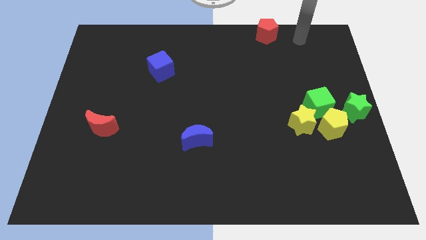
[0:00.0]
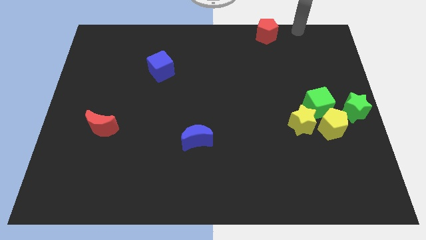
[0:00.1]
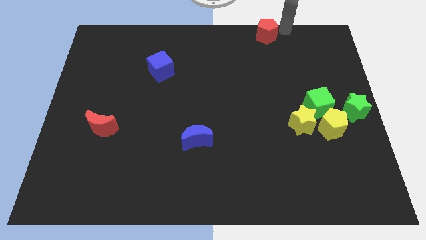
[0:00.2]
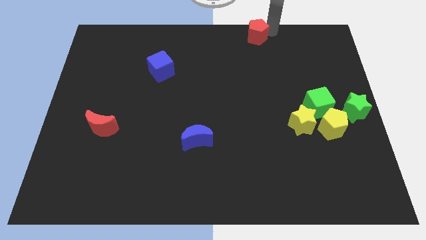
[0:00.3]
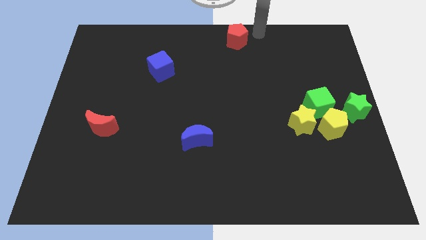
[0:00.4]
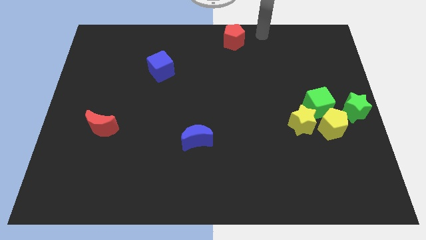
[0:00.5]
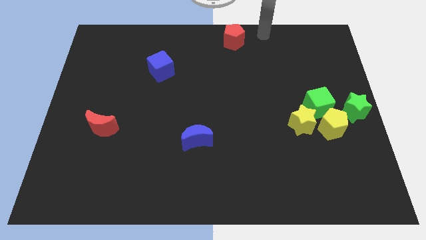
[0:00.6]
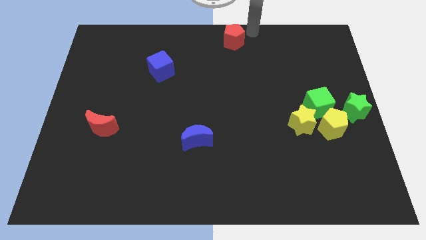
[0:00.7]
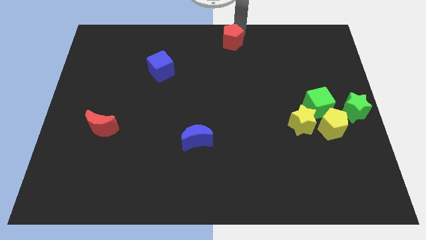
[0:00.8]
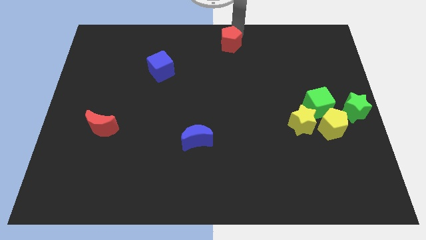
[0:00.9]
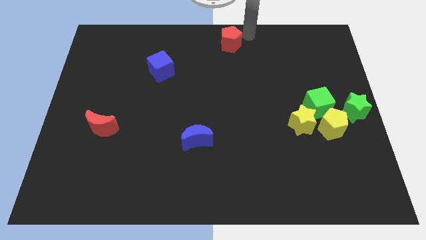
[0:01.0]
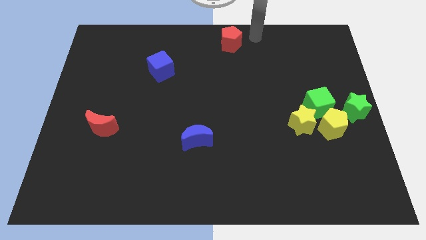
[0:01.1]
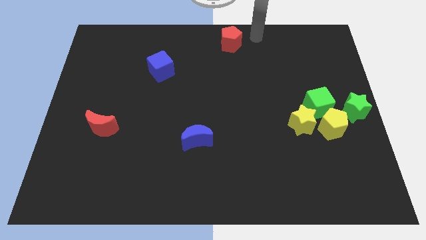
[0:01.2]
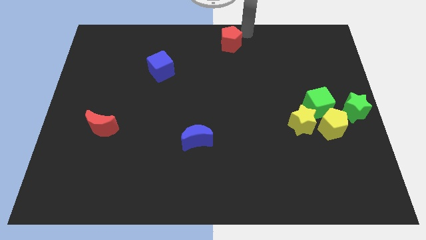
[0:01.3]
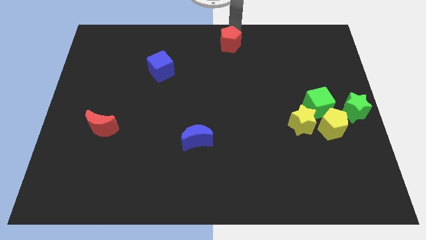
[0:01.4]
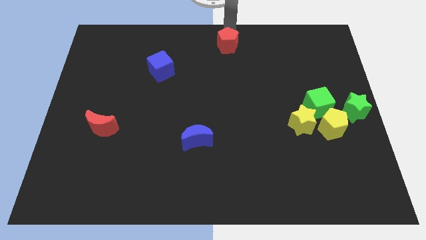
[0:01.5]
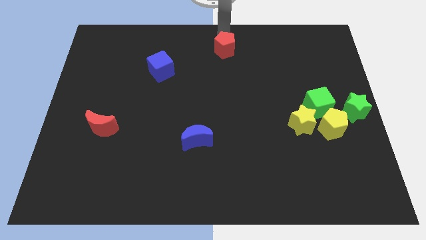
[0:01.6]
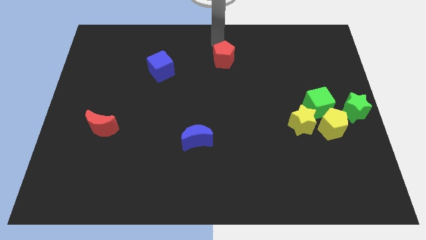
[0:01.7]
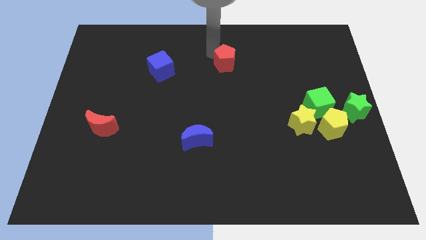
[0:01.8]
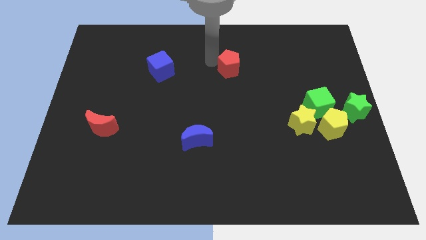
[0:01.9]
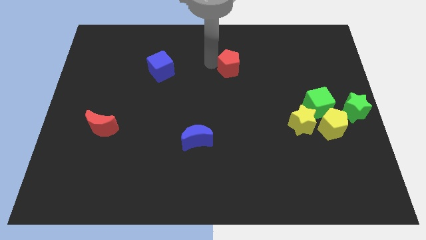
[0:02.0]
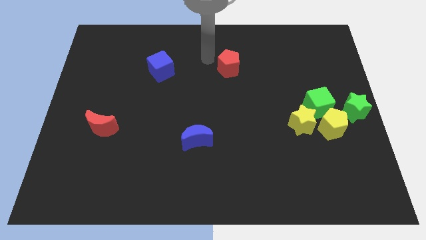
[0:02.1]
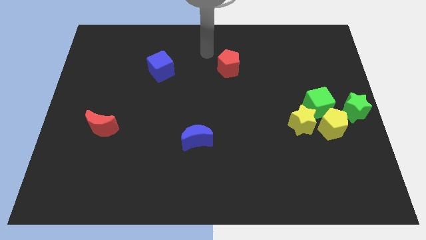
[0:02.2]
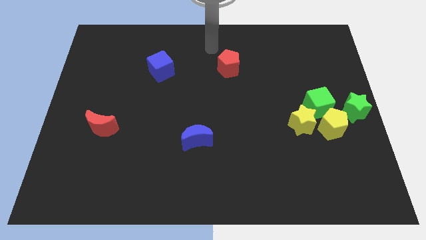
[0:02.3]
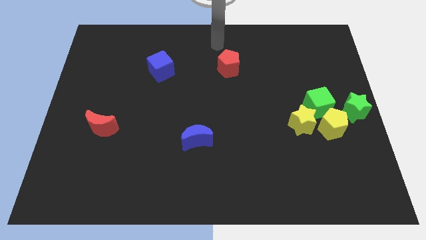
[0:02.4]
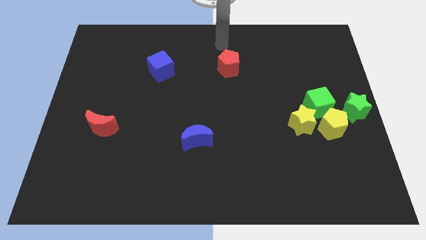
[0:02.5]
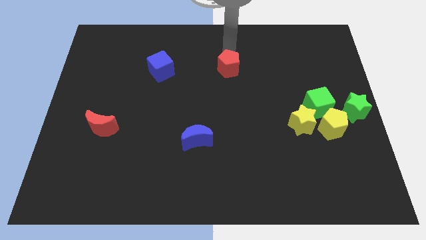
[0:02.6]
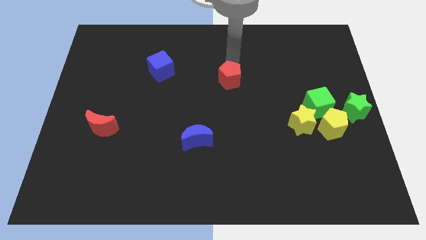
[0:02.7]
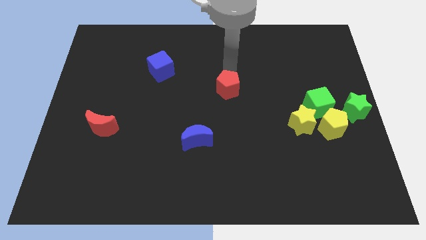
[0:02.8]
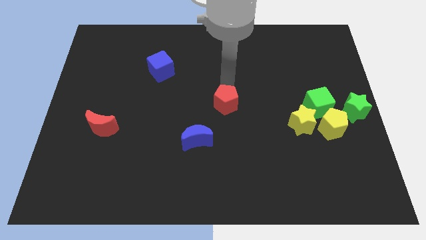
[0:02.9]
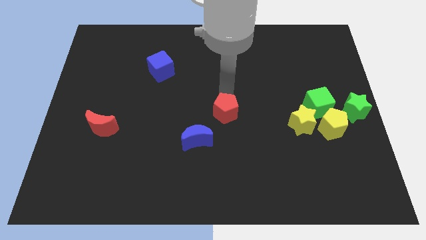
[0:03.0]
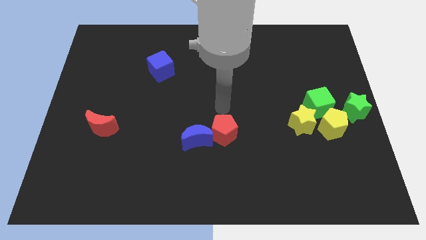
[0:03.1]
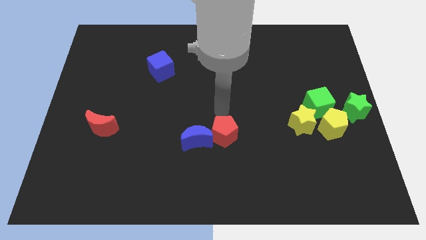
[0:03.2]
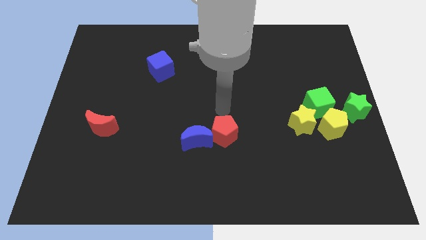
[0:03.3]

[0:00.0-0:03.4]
move red pentagon close to blue moon

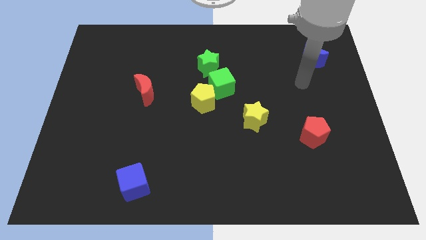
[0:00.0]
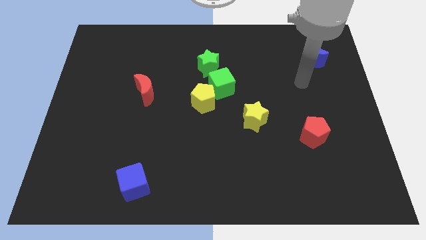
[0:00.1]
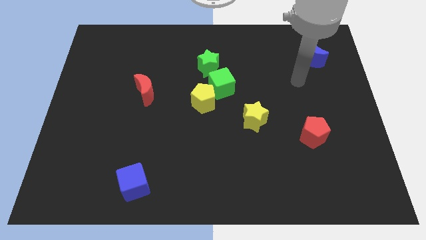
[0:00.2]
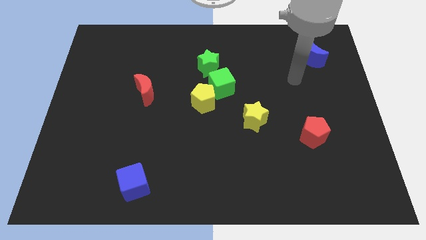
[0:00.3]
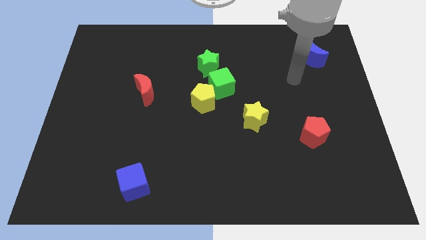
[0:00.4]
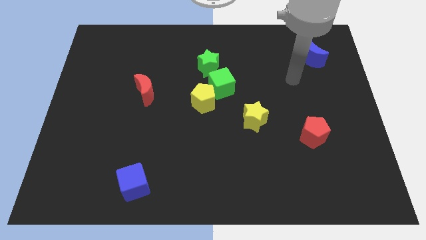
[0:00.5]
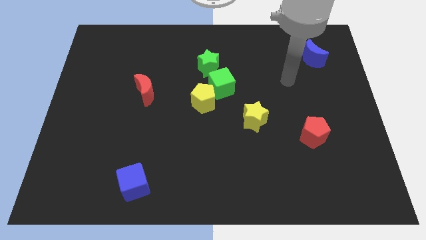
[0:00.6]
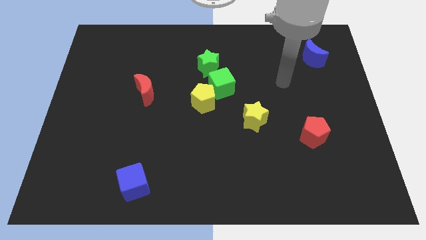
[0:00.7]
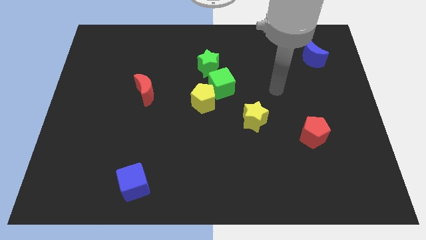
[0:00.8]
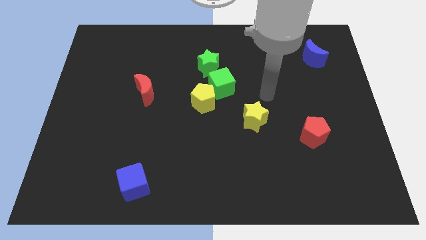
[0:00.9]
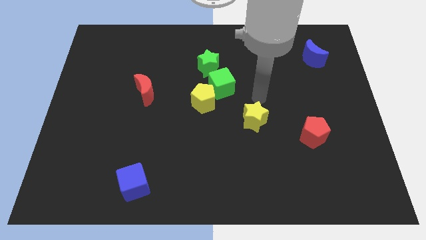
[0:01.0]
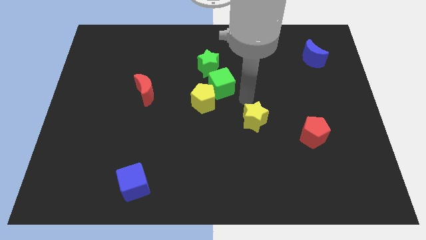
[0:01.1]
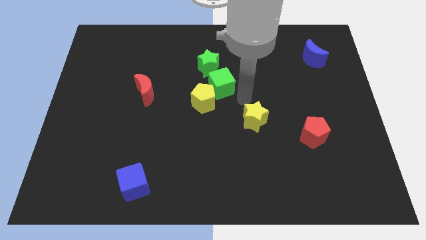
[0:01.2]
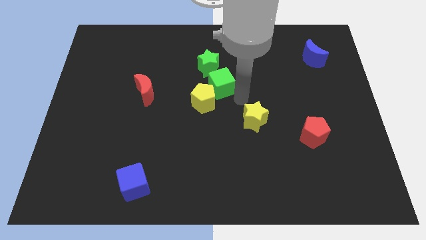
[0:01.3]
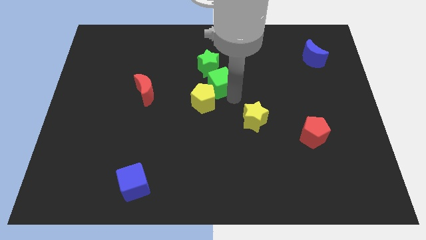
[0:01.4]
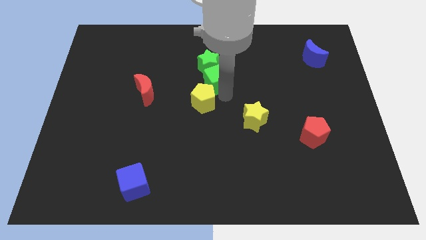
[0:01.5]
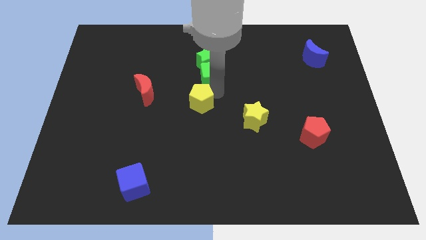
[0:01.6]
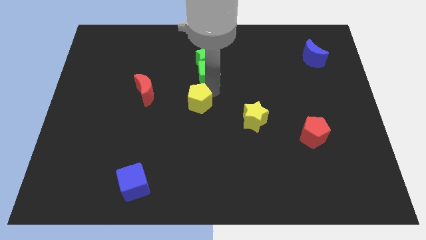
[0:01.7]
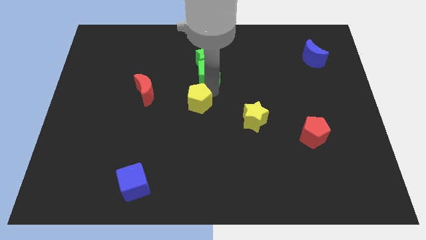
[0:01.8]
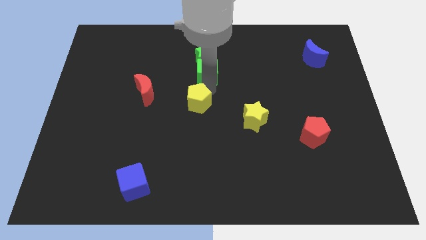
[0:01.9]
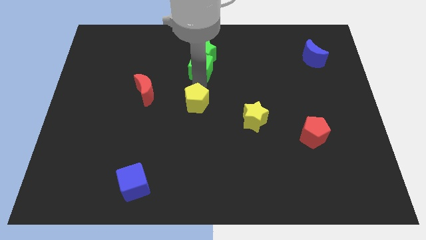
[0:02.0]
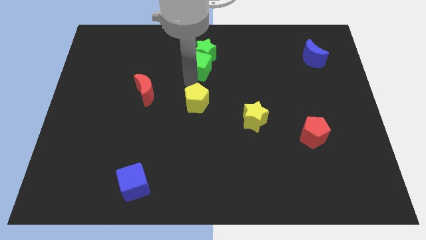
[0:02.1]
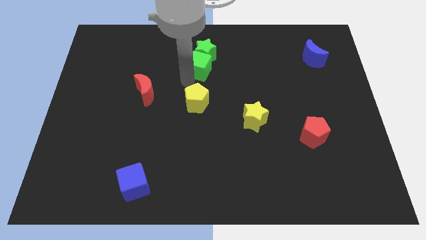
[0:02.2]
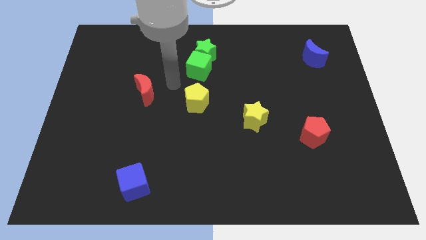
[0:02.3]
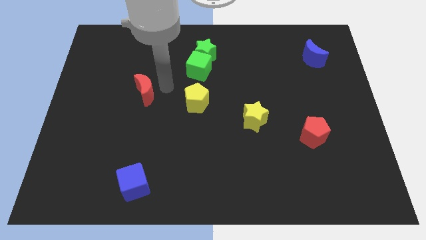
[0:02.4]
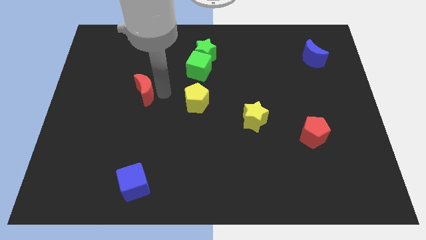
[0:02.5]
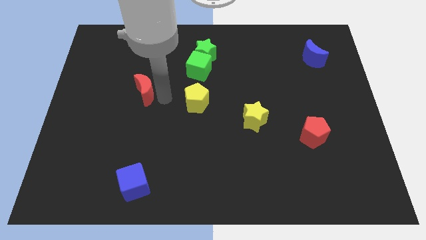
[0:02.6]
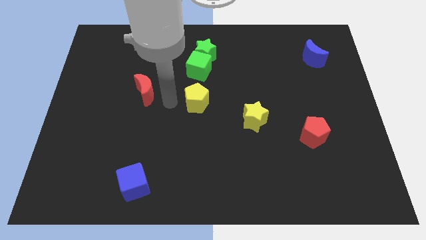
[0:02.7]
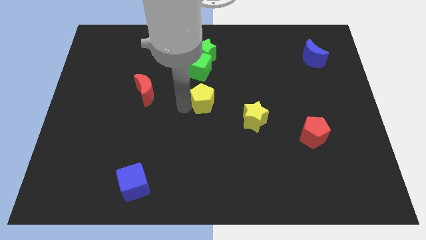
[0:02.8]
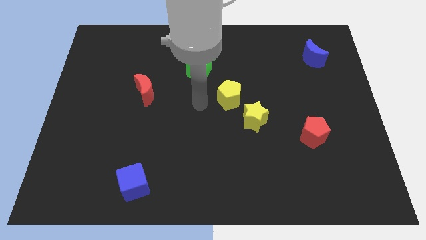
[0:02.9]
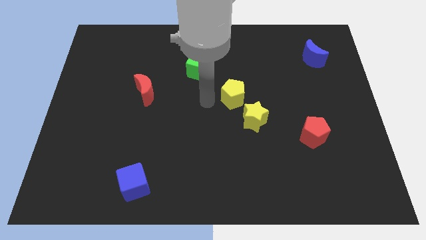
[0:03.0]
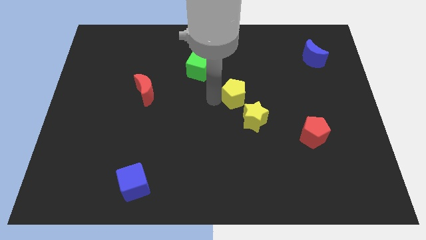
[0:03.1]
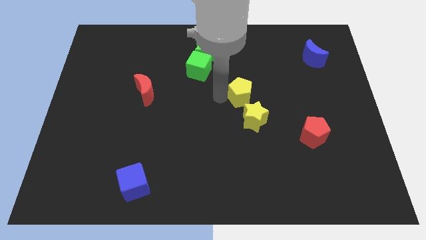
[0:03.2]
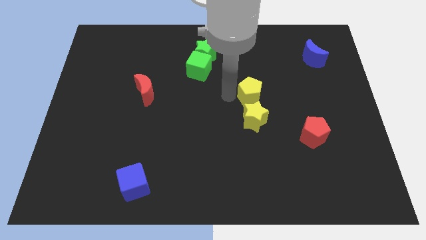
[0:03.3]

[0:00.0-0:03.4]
separate the green cube and yellow pentagon

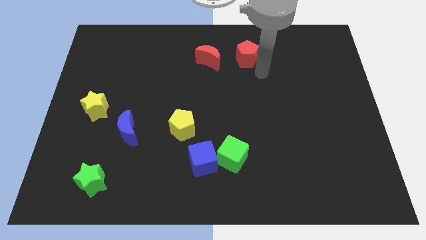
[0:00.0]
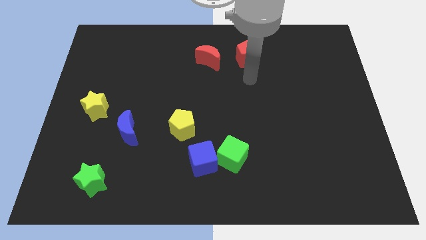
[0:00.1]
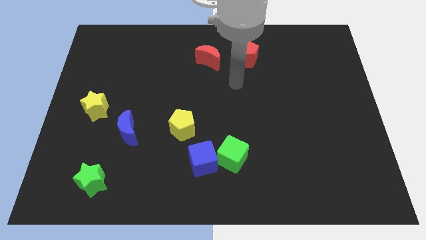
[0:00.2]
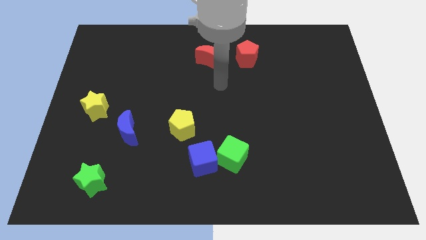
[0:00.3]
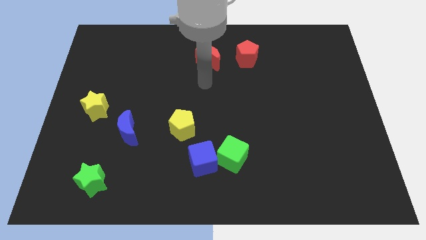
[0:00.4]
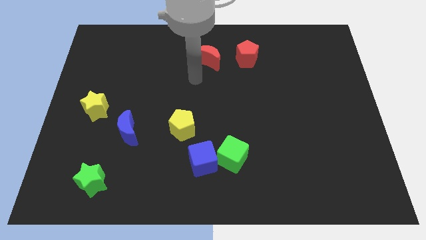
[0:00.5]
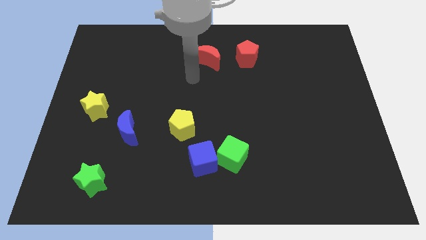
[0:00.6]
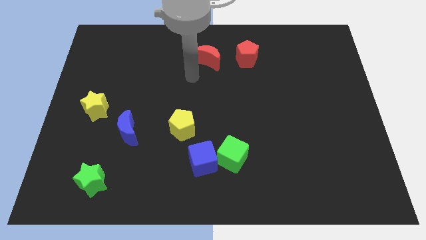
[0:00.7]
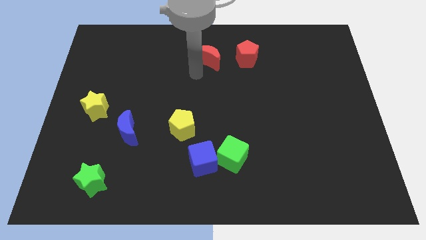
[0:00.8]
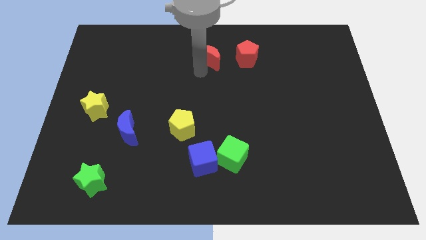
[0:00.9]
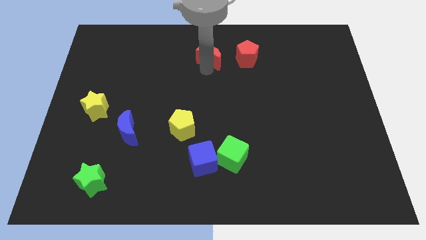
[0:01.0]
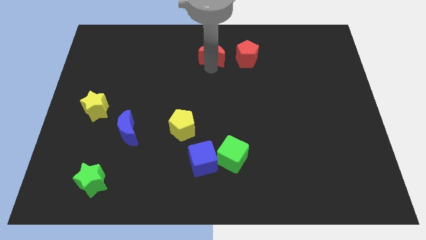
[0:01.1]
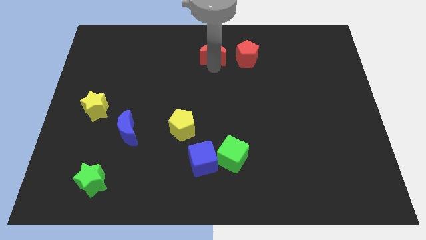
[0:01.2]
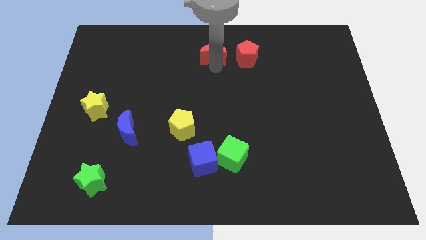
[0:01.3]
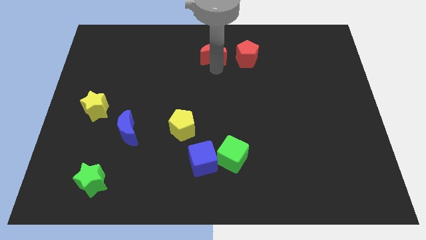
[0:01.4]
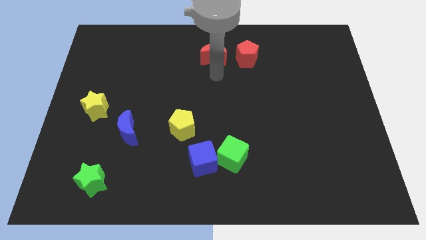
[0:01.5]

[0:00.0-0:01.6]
move red crescent close to the red pentagon

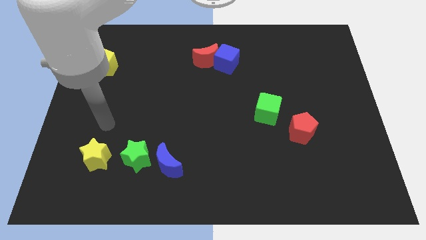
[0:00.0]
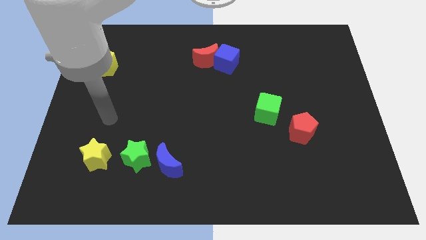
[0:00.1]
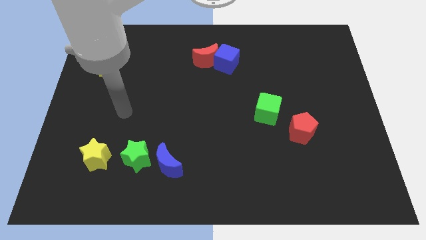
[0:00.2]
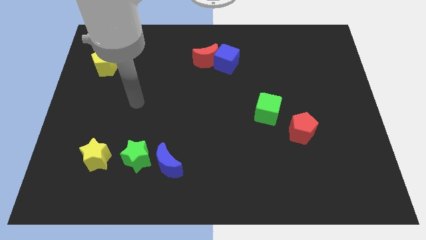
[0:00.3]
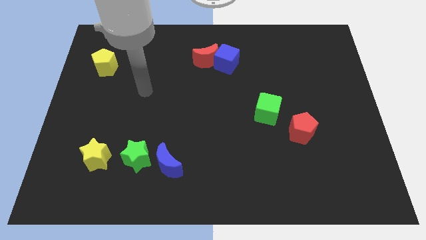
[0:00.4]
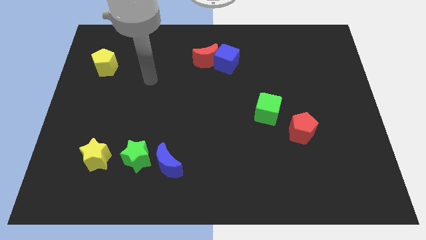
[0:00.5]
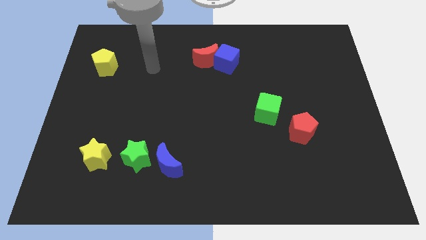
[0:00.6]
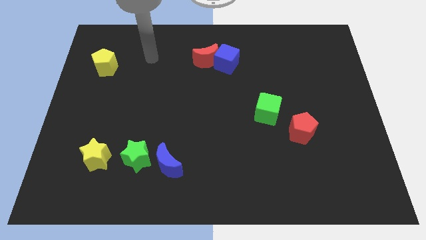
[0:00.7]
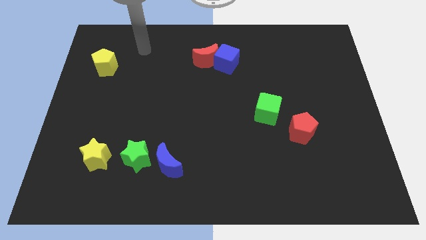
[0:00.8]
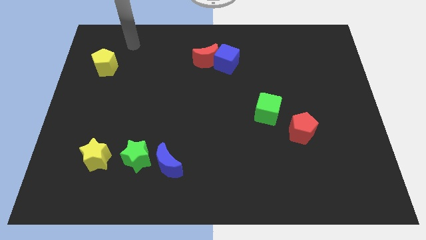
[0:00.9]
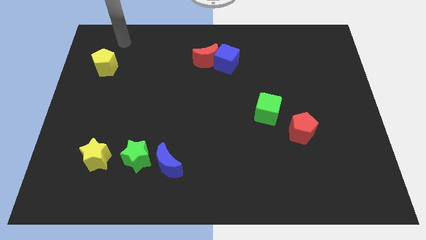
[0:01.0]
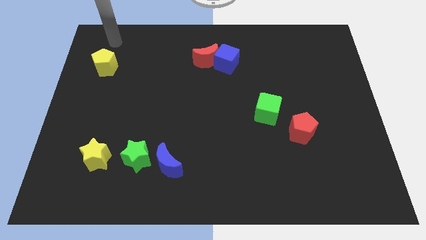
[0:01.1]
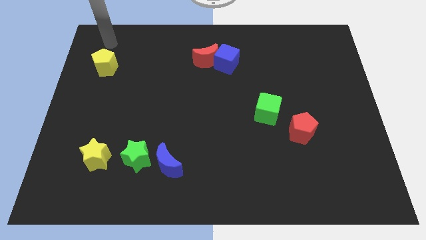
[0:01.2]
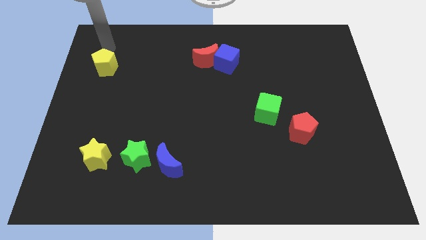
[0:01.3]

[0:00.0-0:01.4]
place arm on the top of yellow pentagon
